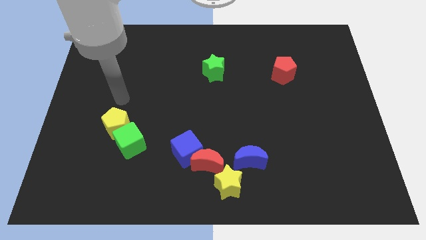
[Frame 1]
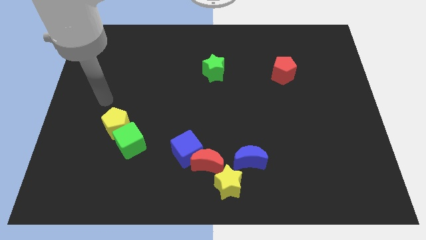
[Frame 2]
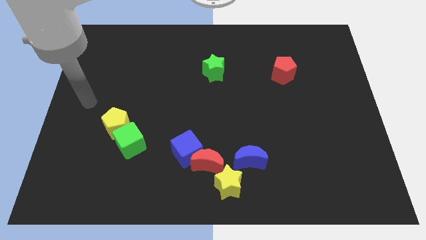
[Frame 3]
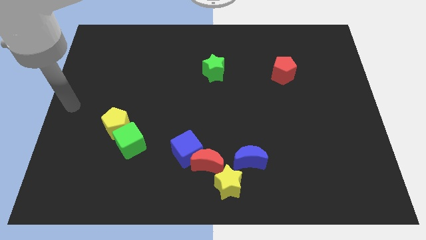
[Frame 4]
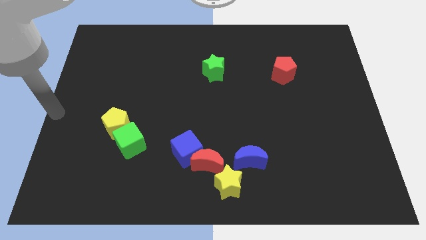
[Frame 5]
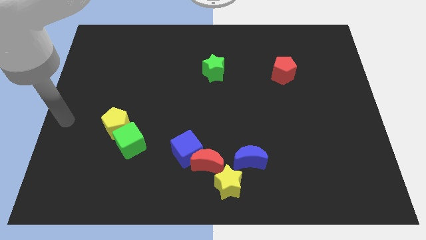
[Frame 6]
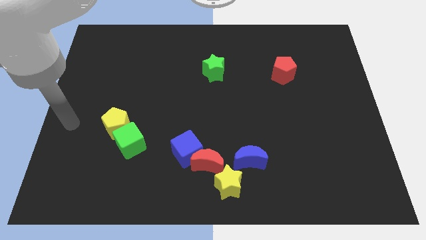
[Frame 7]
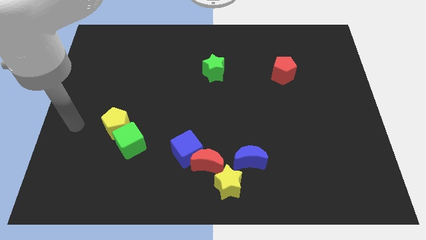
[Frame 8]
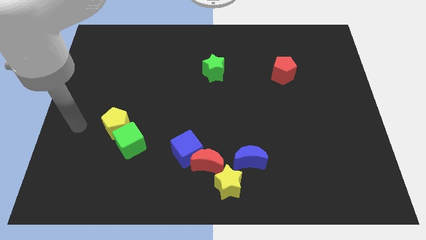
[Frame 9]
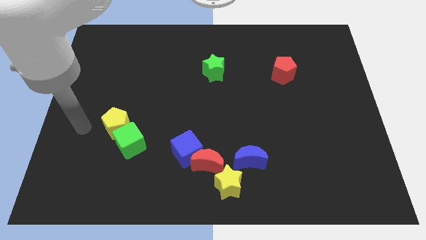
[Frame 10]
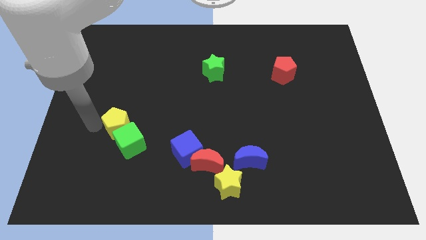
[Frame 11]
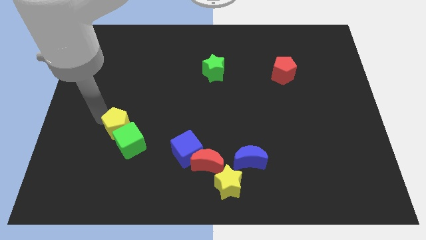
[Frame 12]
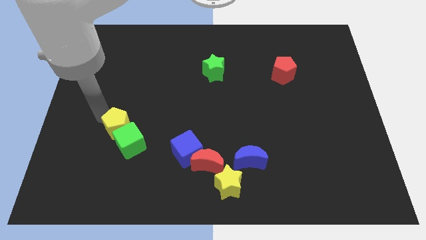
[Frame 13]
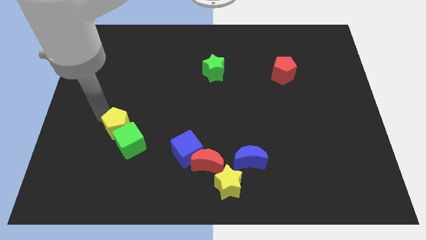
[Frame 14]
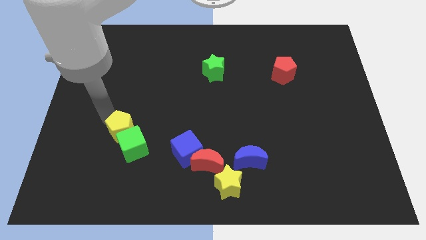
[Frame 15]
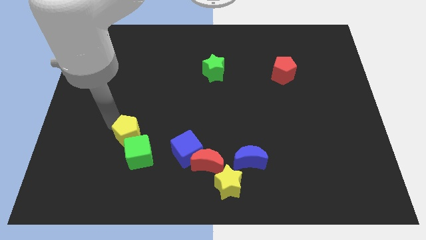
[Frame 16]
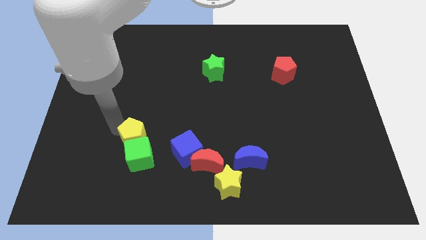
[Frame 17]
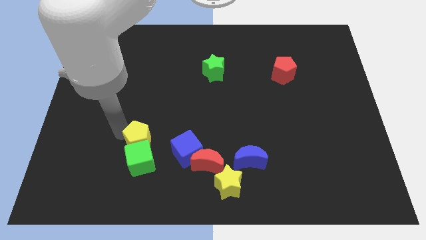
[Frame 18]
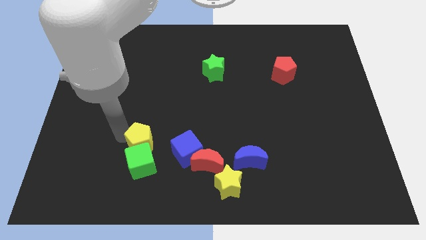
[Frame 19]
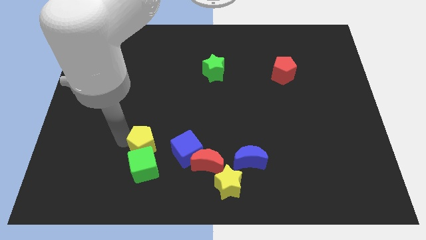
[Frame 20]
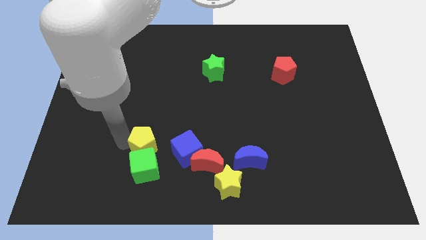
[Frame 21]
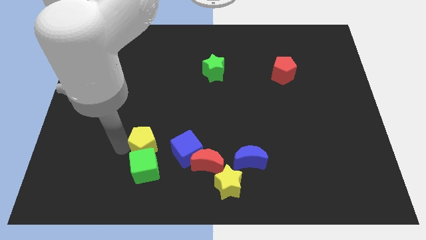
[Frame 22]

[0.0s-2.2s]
move the yellow pentagon and green cube to the left side of the blue cube

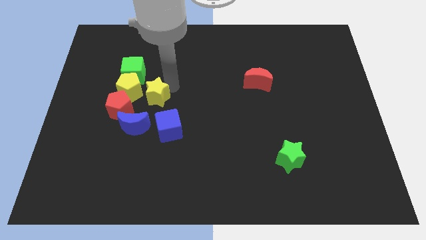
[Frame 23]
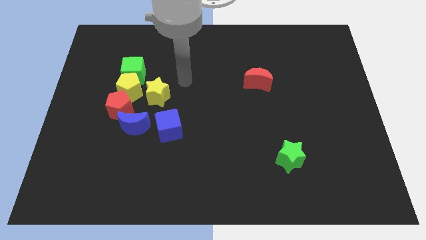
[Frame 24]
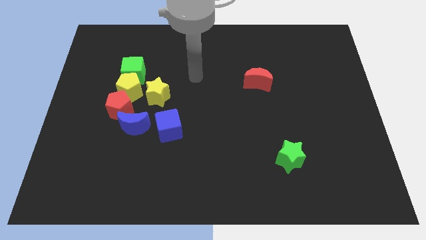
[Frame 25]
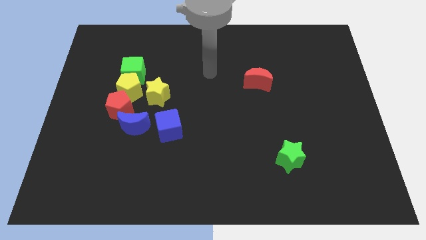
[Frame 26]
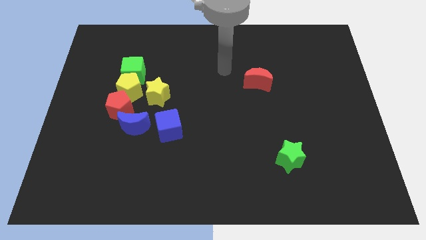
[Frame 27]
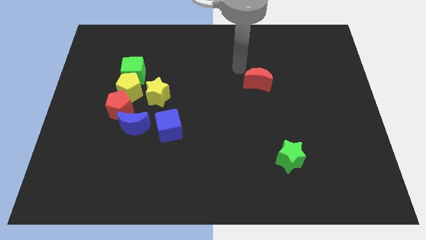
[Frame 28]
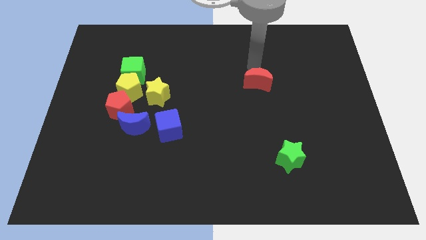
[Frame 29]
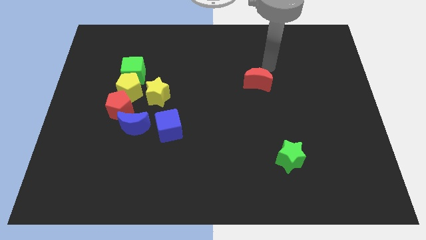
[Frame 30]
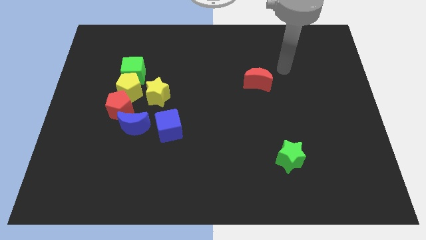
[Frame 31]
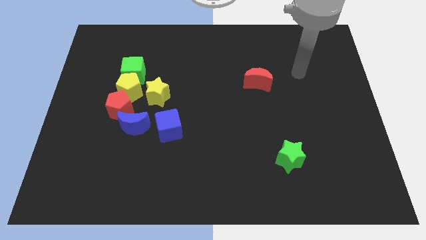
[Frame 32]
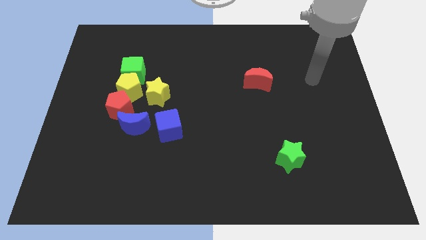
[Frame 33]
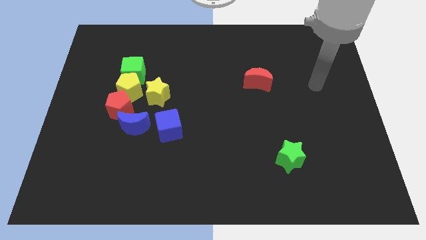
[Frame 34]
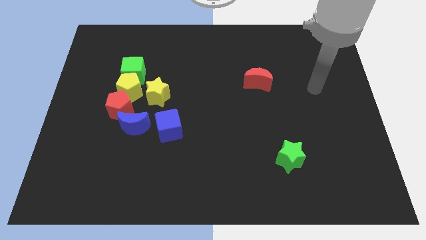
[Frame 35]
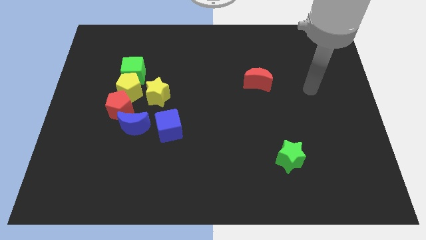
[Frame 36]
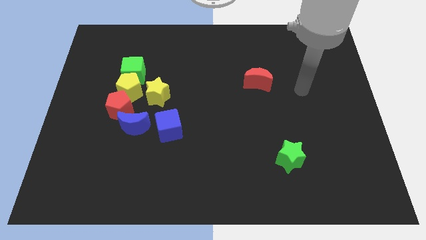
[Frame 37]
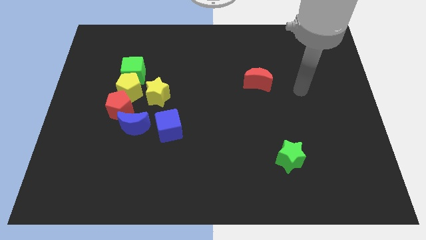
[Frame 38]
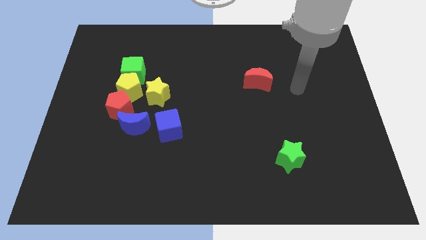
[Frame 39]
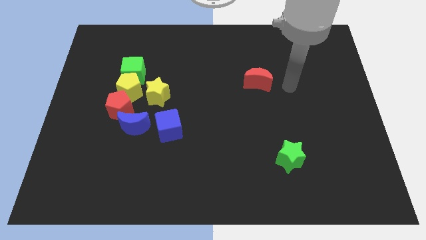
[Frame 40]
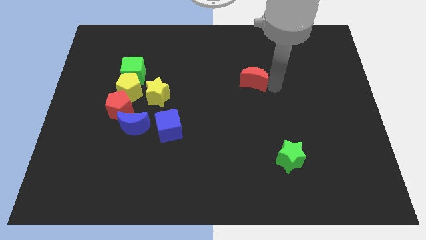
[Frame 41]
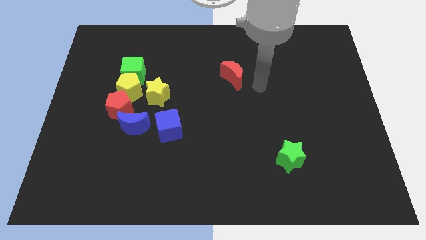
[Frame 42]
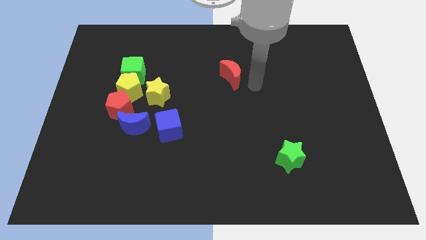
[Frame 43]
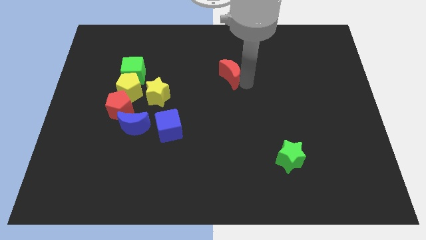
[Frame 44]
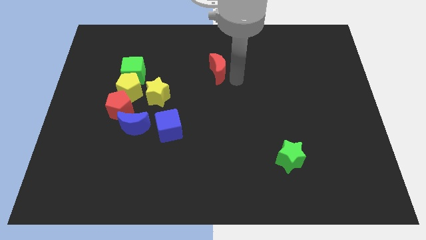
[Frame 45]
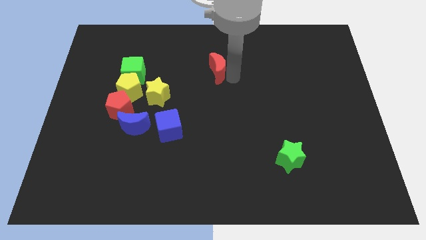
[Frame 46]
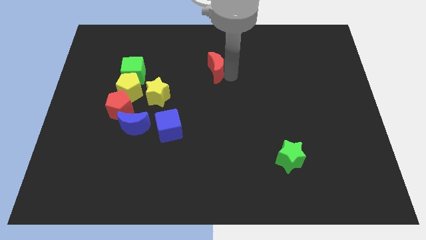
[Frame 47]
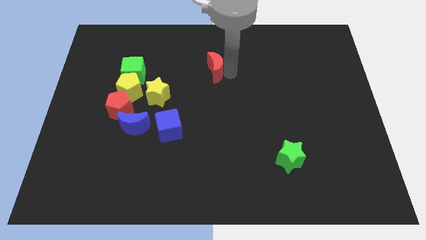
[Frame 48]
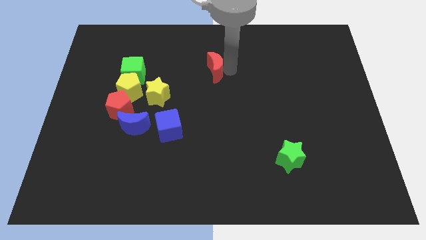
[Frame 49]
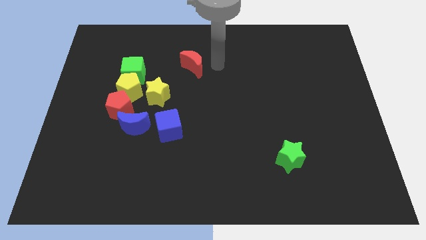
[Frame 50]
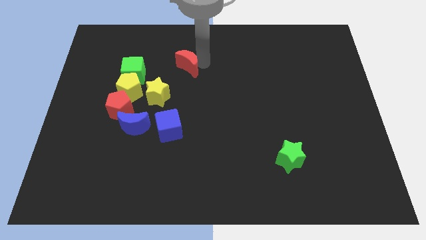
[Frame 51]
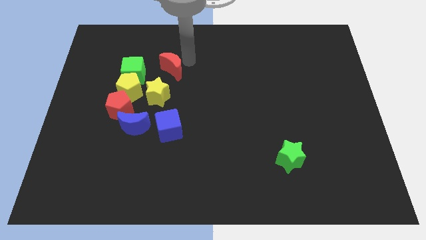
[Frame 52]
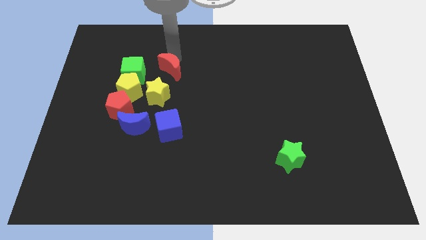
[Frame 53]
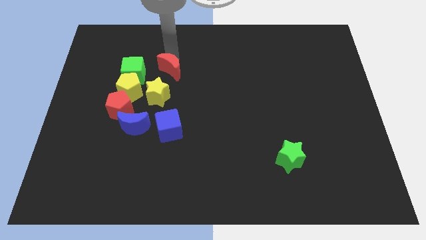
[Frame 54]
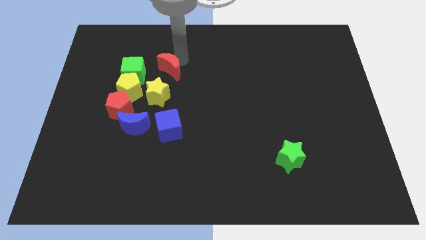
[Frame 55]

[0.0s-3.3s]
slide the red moon towards the top side of the yellow pentagon

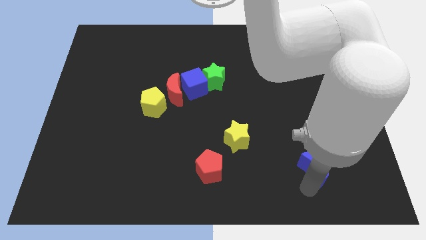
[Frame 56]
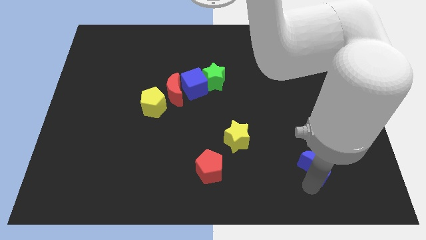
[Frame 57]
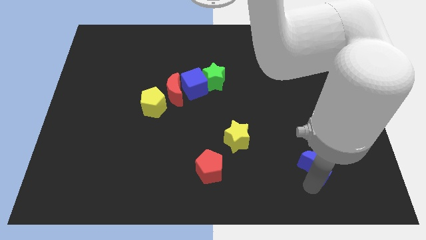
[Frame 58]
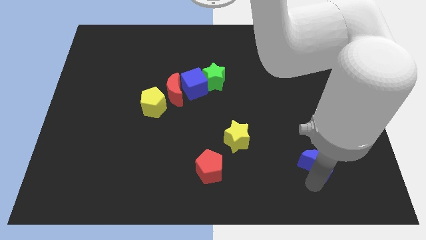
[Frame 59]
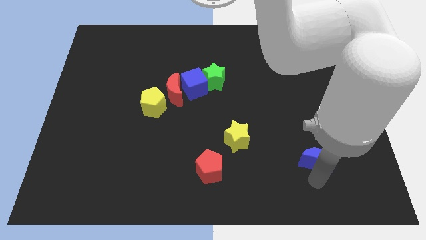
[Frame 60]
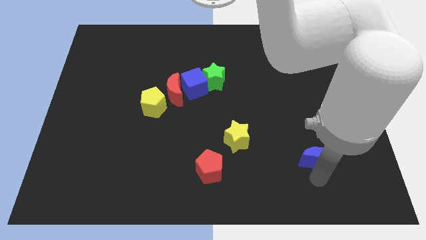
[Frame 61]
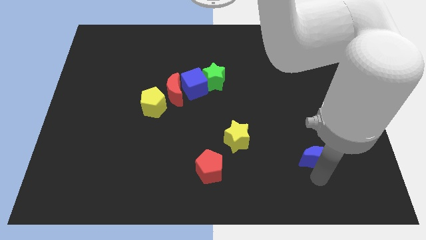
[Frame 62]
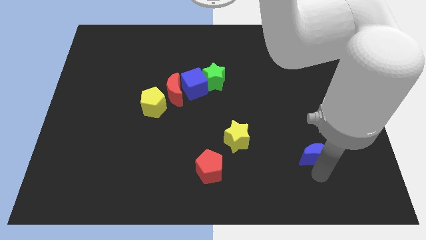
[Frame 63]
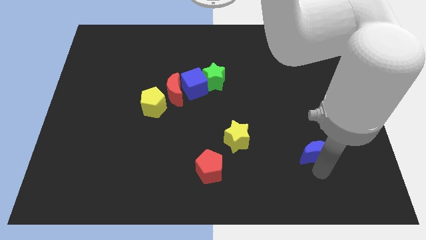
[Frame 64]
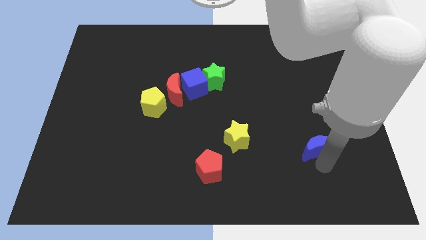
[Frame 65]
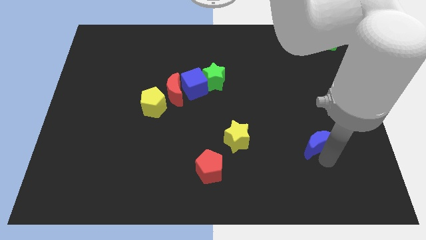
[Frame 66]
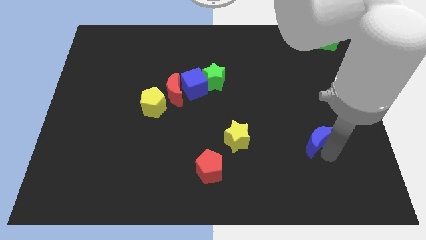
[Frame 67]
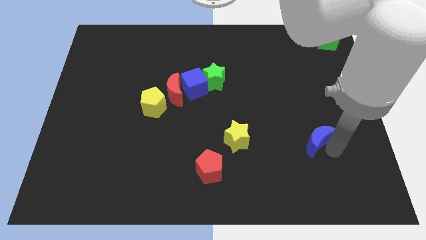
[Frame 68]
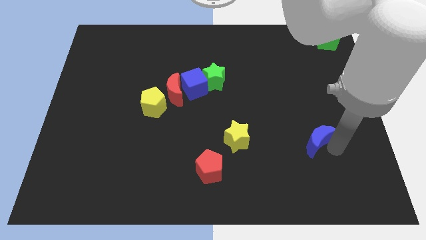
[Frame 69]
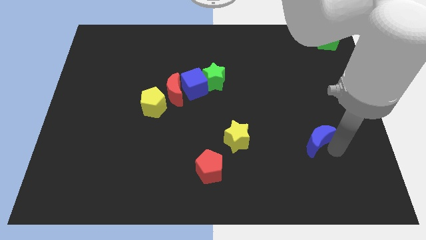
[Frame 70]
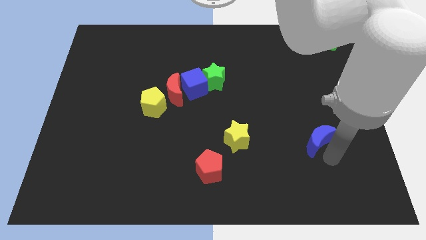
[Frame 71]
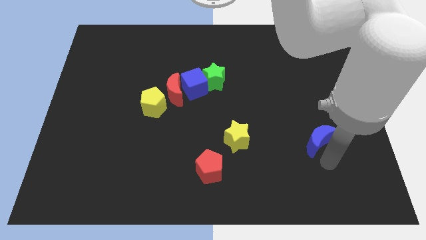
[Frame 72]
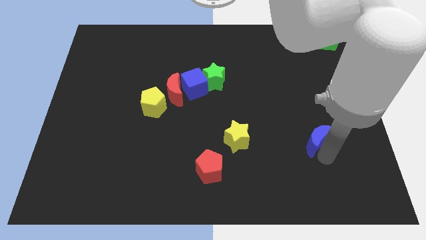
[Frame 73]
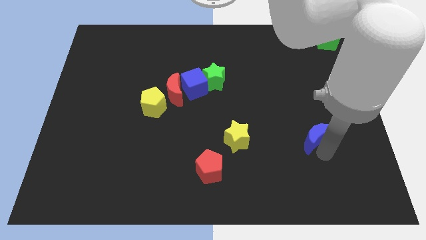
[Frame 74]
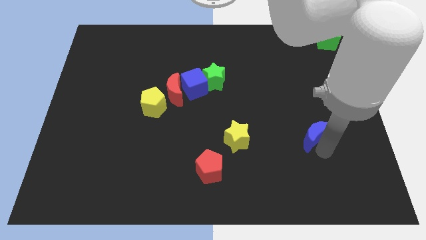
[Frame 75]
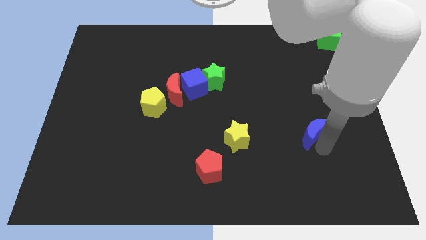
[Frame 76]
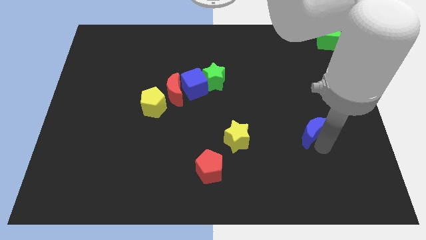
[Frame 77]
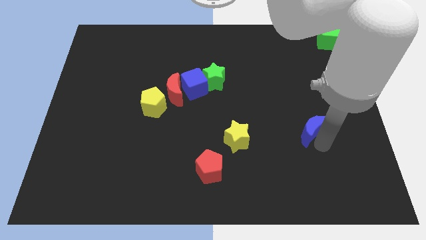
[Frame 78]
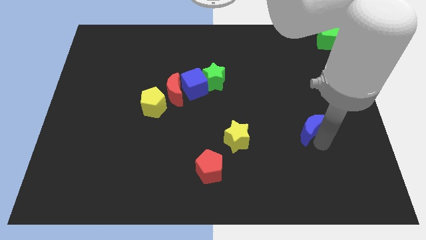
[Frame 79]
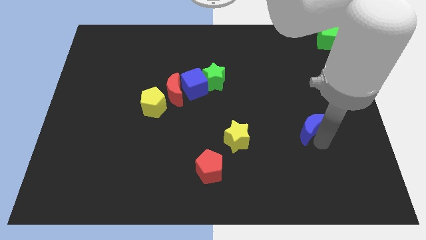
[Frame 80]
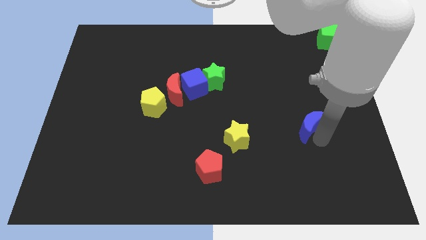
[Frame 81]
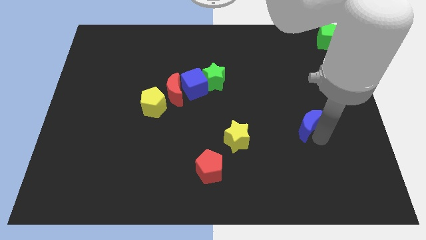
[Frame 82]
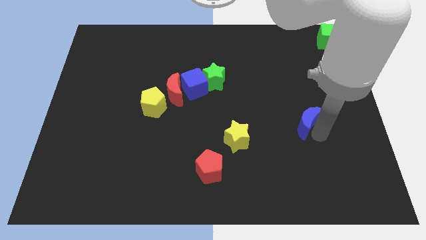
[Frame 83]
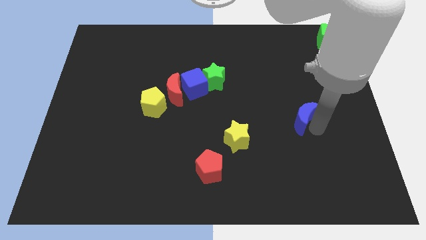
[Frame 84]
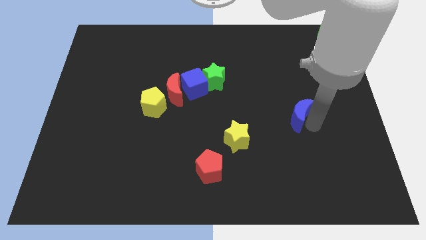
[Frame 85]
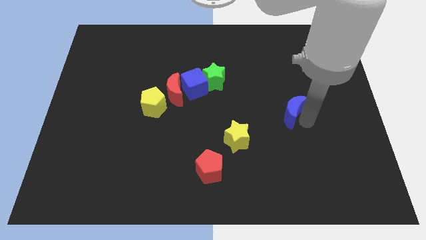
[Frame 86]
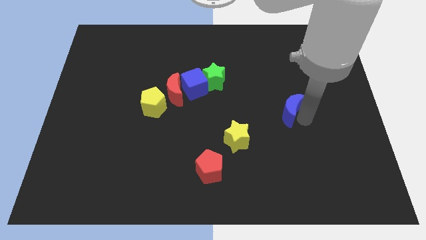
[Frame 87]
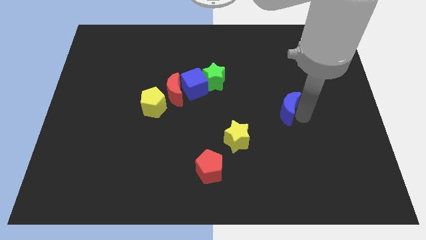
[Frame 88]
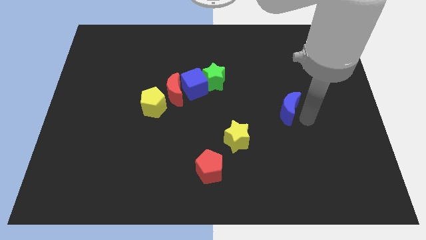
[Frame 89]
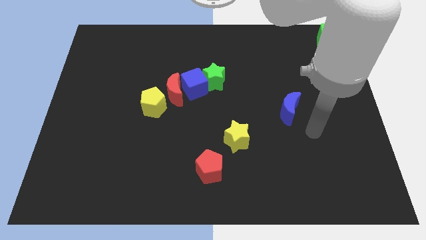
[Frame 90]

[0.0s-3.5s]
place the blue moon between yellow star and green cube
